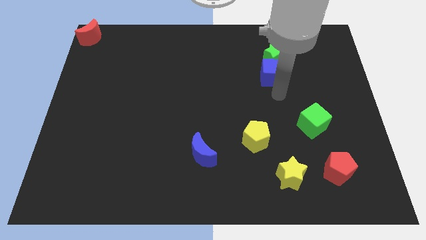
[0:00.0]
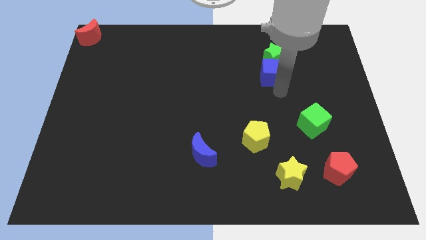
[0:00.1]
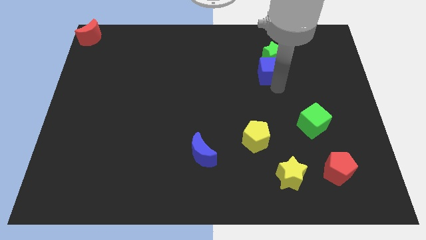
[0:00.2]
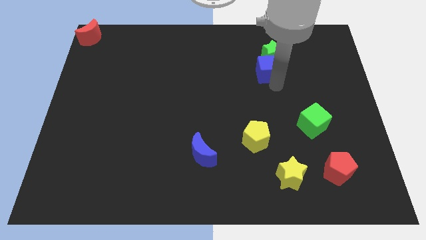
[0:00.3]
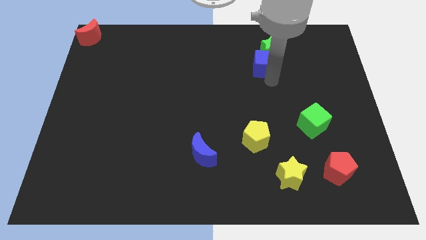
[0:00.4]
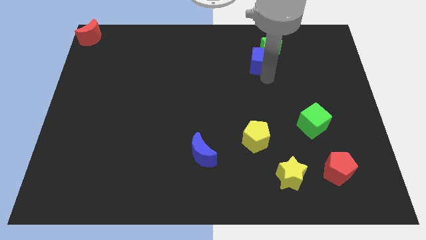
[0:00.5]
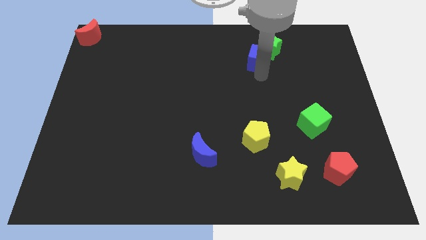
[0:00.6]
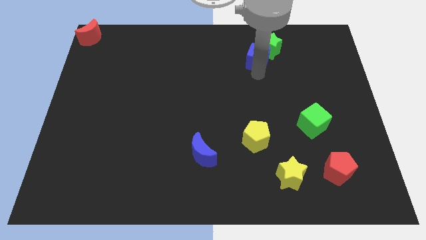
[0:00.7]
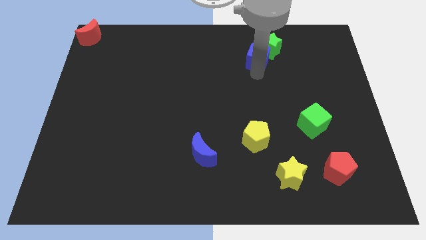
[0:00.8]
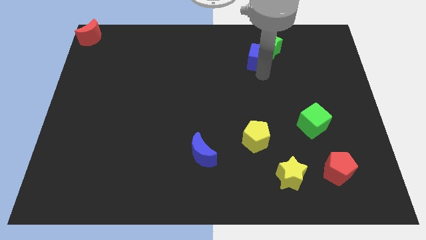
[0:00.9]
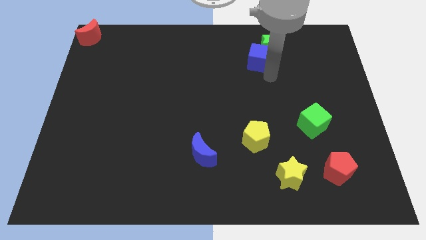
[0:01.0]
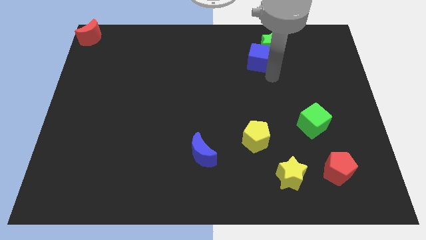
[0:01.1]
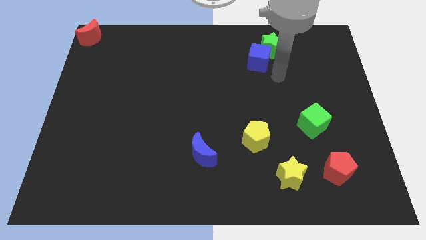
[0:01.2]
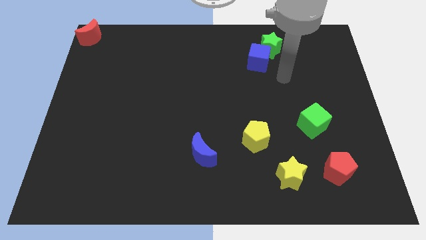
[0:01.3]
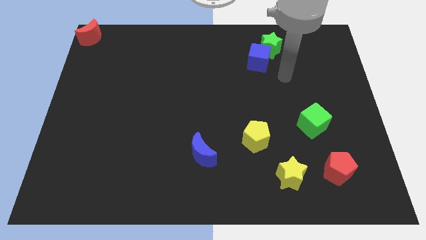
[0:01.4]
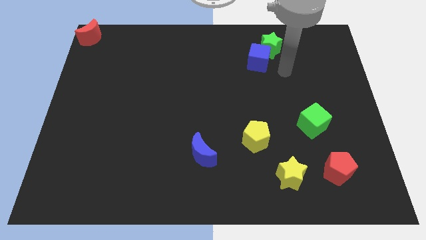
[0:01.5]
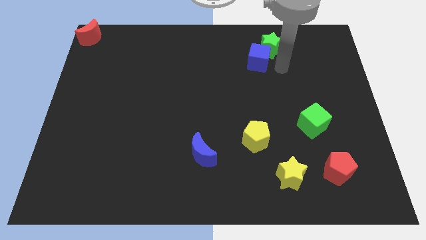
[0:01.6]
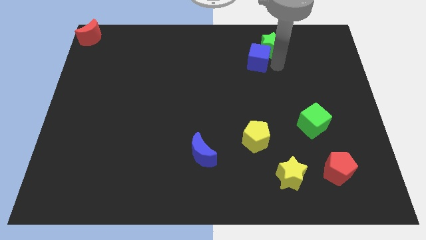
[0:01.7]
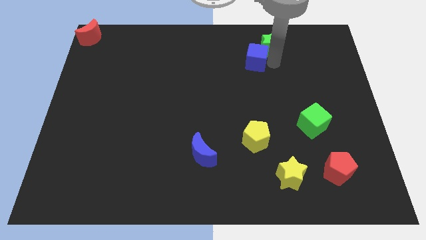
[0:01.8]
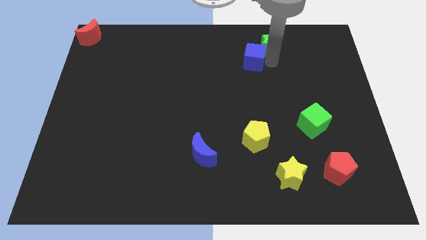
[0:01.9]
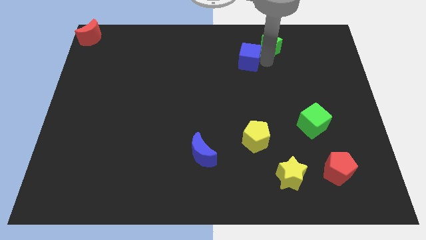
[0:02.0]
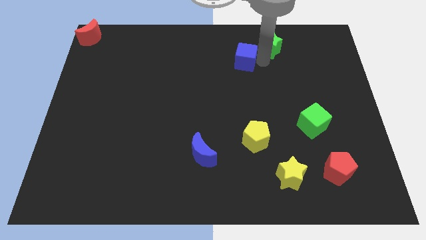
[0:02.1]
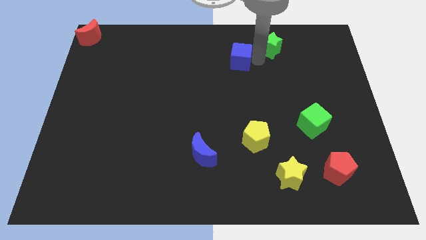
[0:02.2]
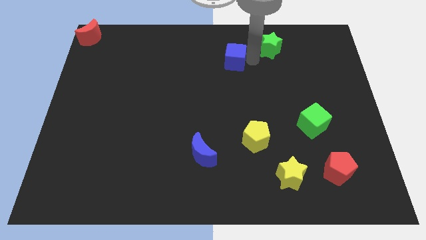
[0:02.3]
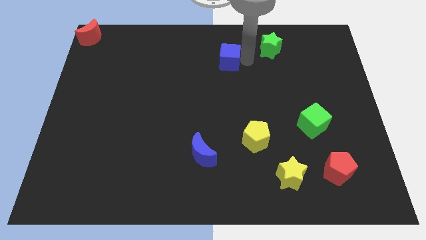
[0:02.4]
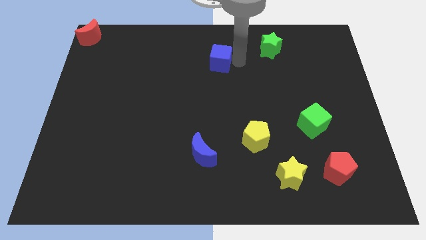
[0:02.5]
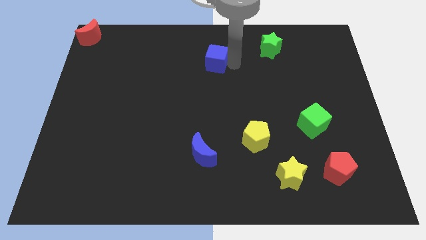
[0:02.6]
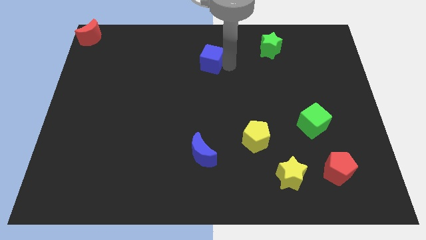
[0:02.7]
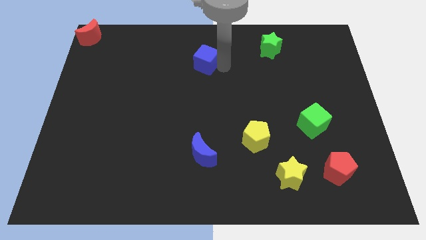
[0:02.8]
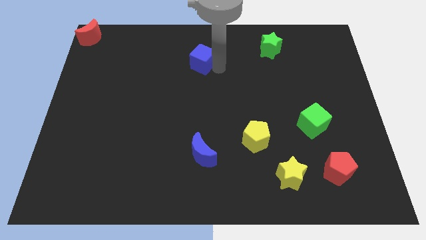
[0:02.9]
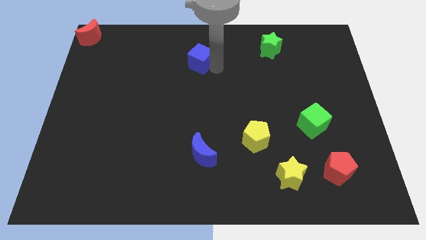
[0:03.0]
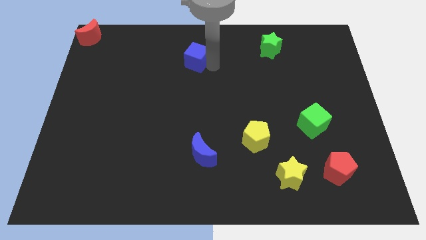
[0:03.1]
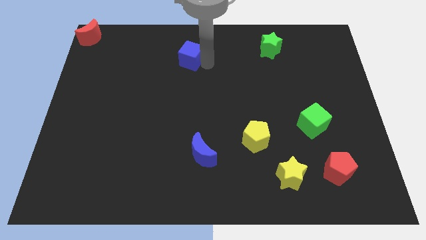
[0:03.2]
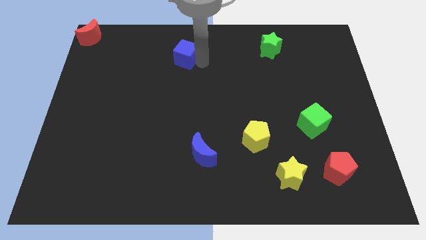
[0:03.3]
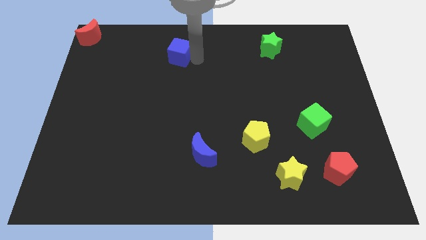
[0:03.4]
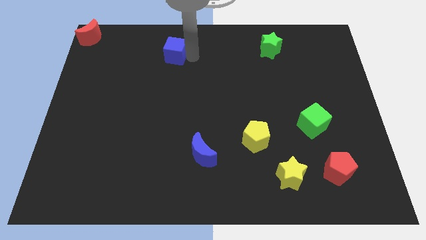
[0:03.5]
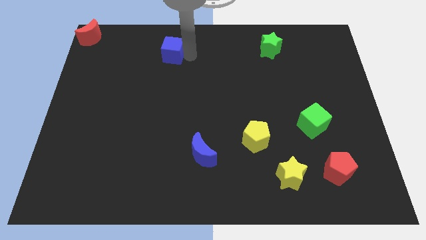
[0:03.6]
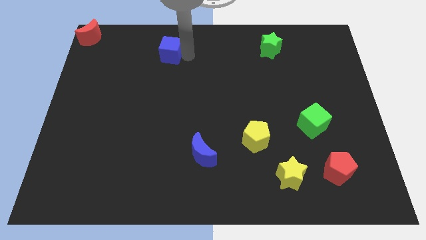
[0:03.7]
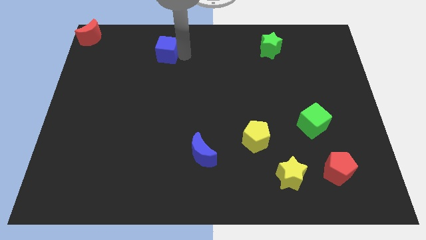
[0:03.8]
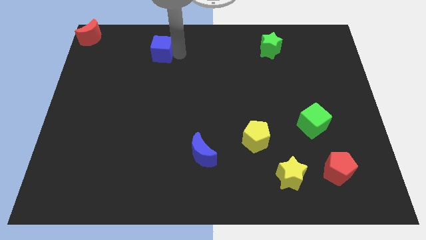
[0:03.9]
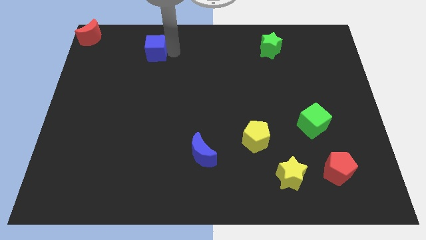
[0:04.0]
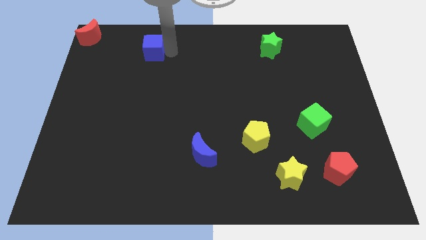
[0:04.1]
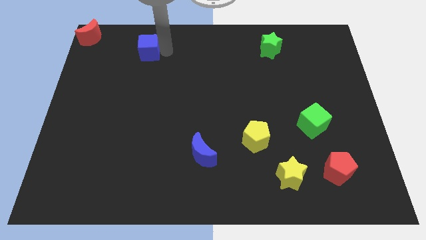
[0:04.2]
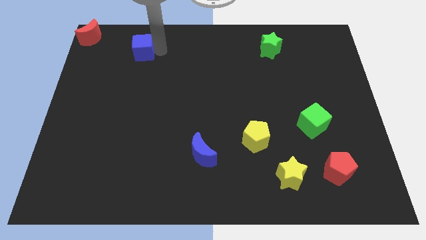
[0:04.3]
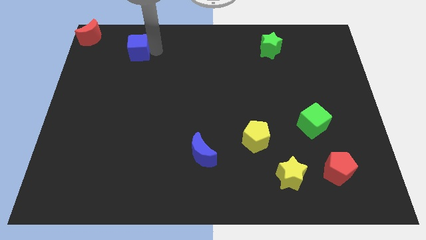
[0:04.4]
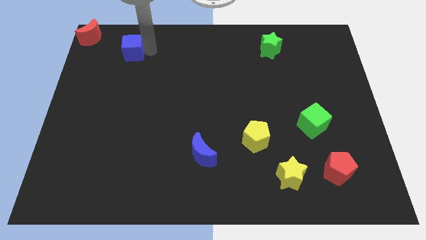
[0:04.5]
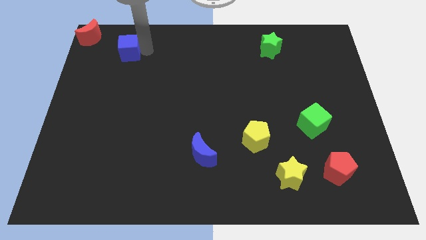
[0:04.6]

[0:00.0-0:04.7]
place the blue cube right to the red moon

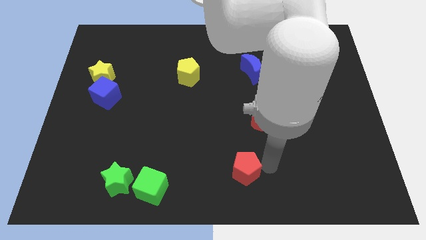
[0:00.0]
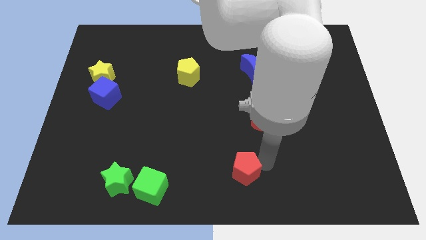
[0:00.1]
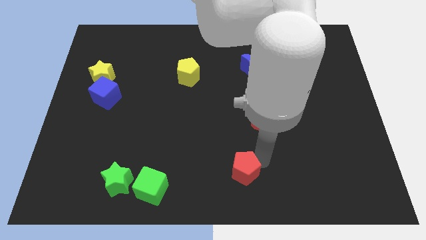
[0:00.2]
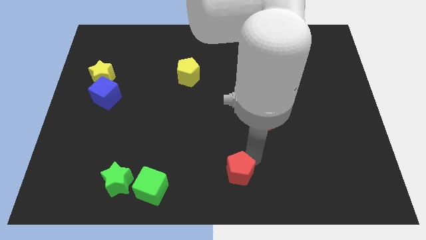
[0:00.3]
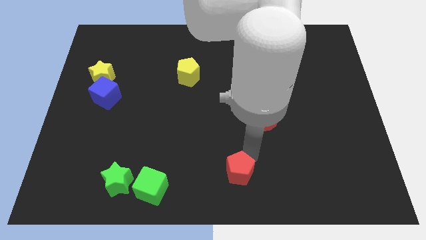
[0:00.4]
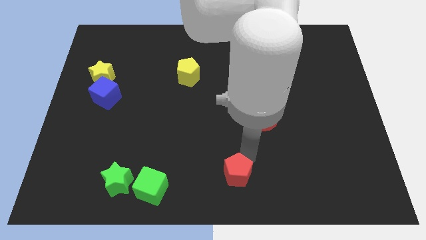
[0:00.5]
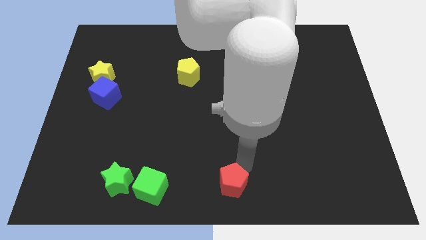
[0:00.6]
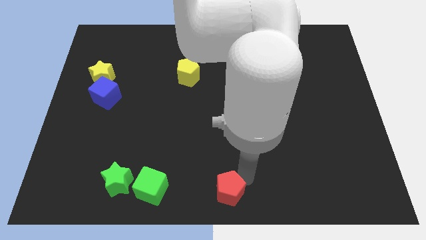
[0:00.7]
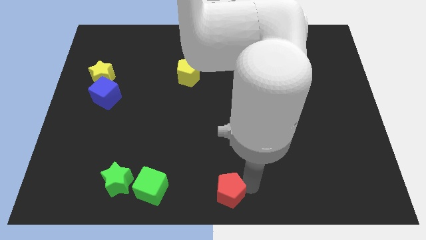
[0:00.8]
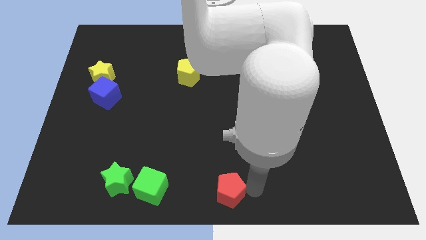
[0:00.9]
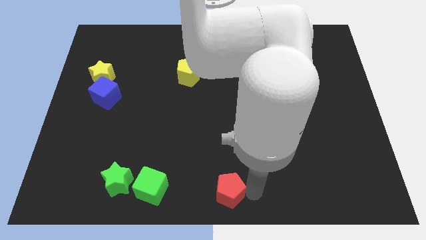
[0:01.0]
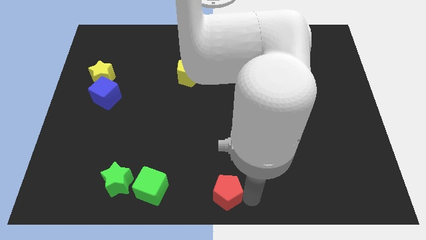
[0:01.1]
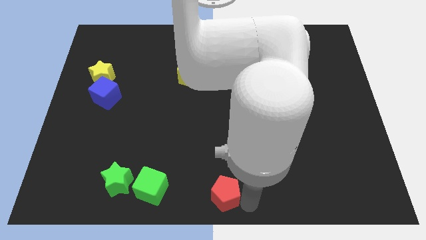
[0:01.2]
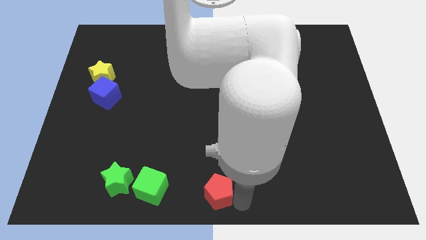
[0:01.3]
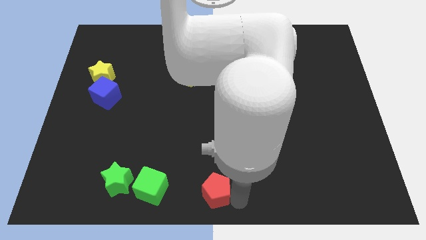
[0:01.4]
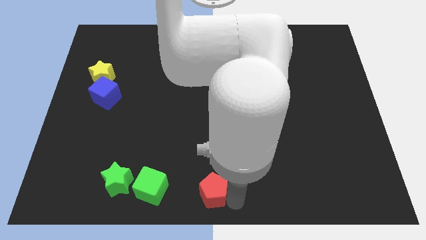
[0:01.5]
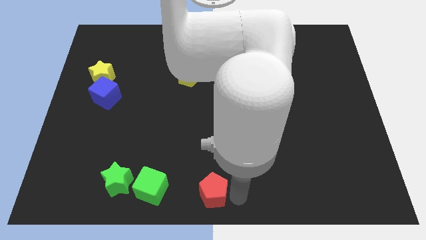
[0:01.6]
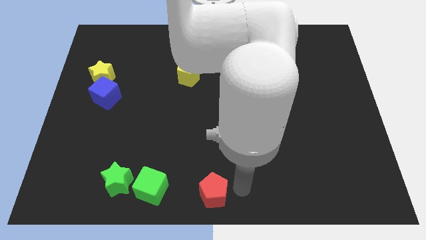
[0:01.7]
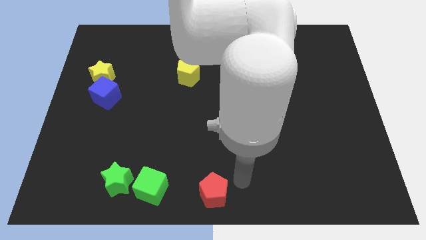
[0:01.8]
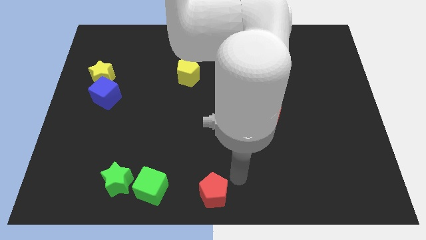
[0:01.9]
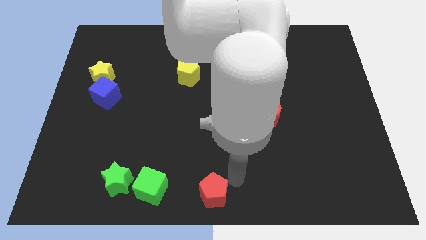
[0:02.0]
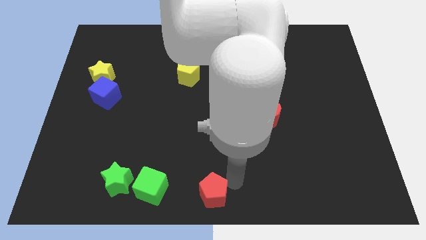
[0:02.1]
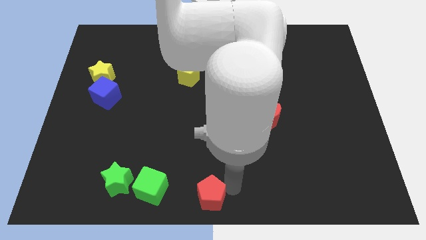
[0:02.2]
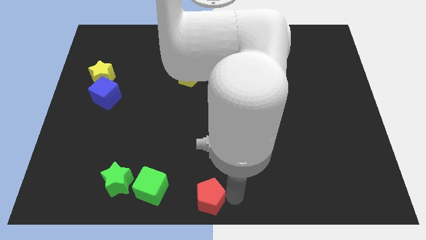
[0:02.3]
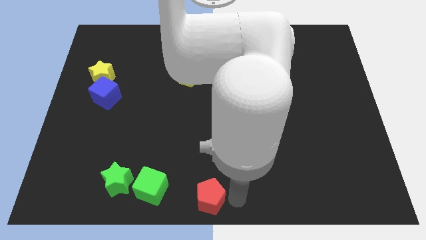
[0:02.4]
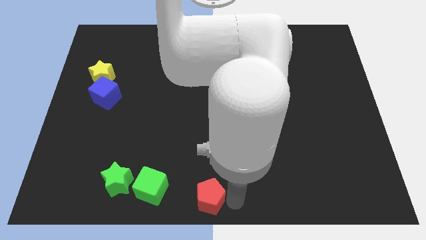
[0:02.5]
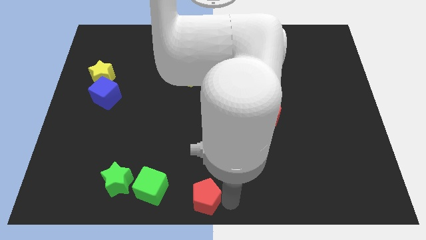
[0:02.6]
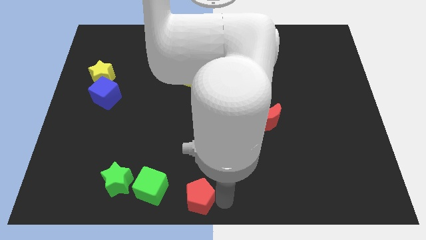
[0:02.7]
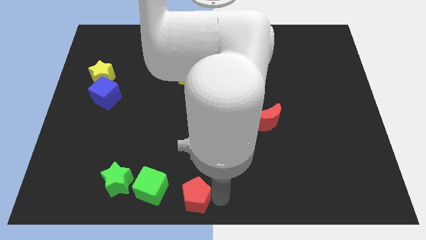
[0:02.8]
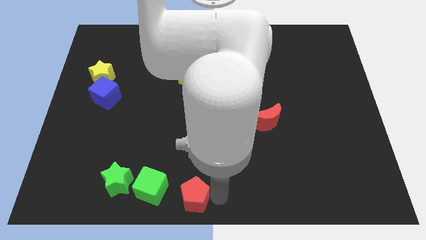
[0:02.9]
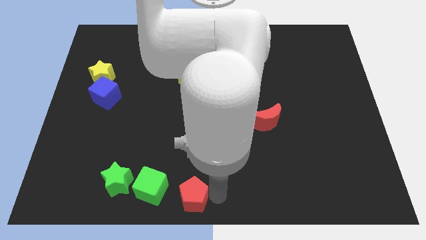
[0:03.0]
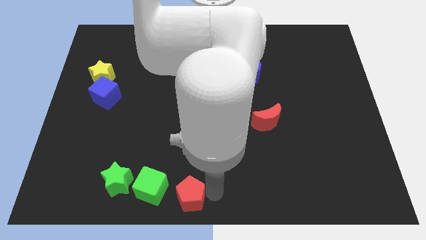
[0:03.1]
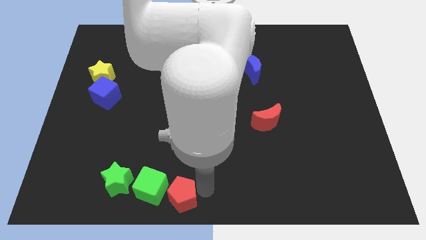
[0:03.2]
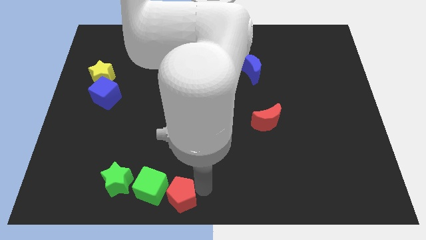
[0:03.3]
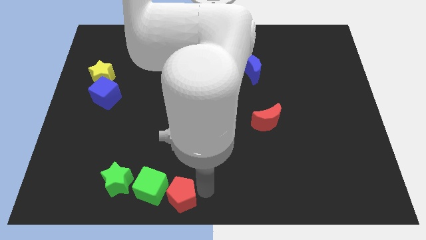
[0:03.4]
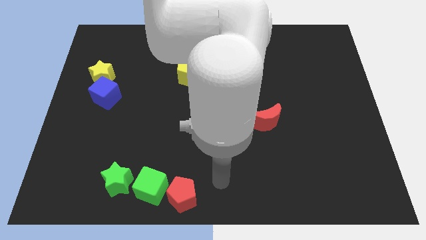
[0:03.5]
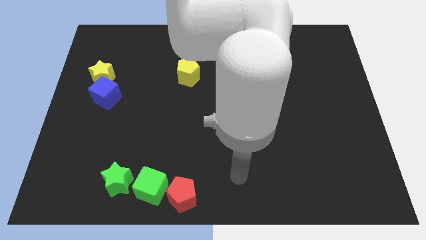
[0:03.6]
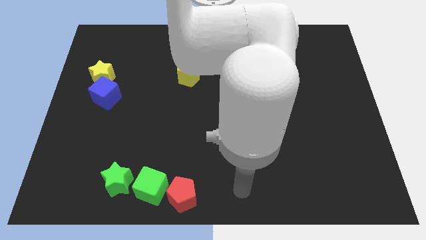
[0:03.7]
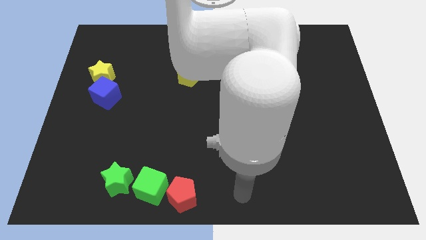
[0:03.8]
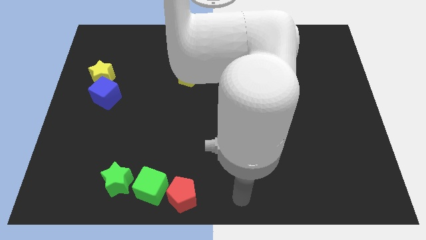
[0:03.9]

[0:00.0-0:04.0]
place the red pentagon to the right of the green cube
